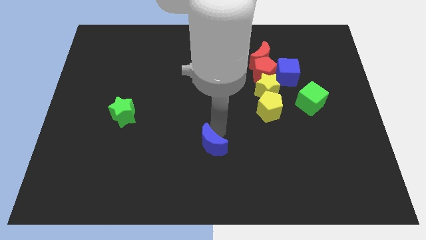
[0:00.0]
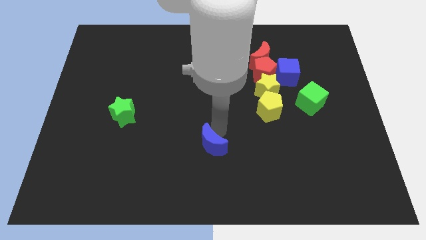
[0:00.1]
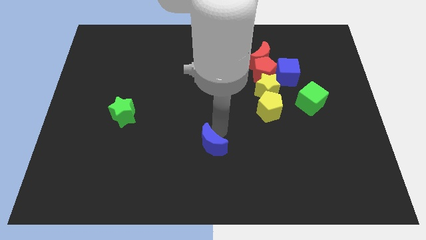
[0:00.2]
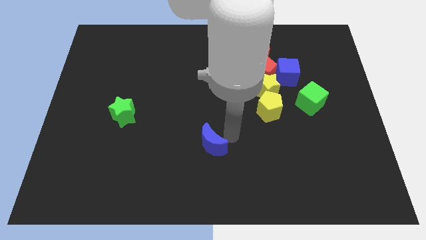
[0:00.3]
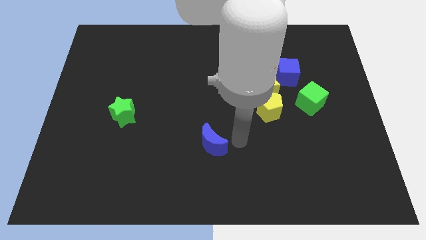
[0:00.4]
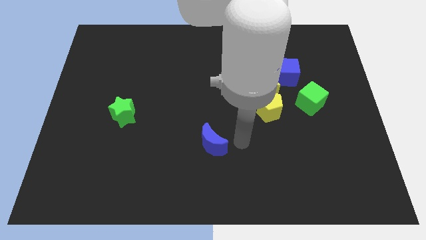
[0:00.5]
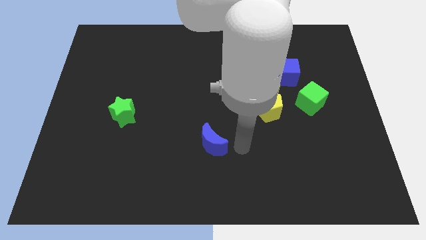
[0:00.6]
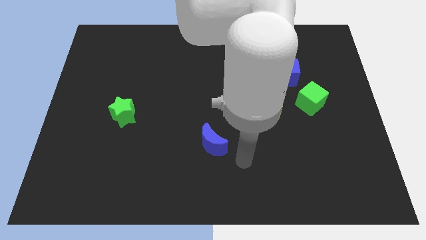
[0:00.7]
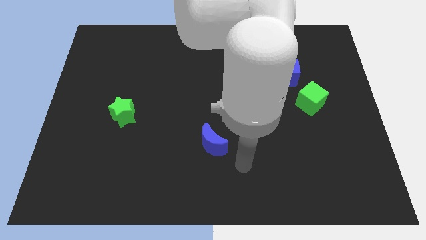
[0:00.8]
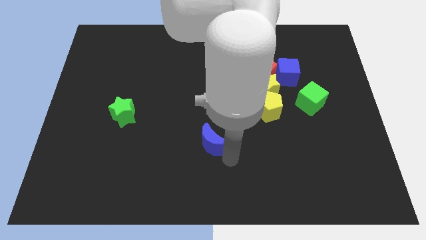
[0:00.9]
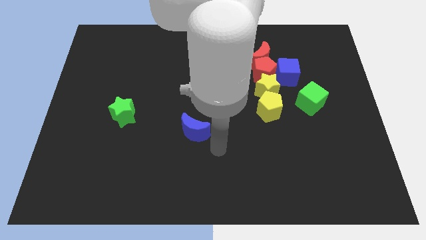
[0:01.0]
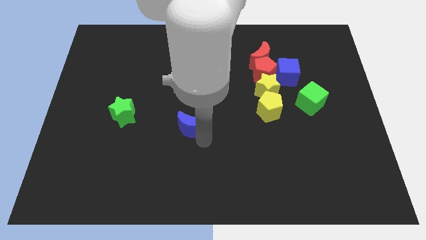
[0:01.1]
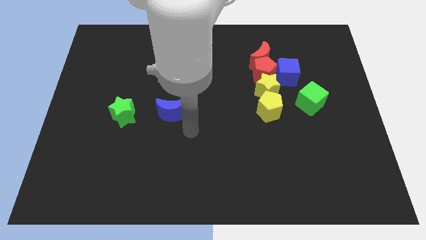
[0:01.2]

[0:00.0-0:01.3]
move the blue crescent parallel right to the green star

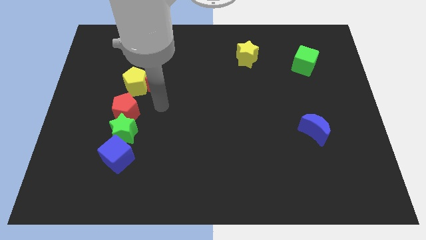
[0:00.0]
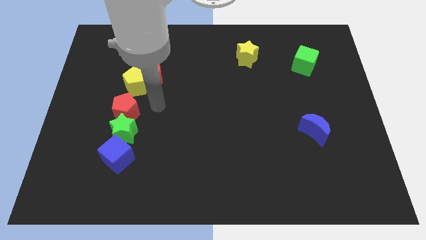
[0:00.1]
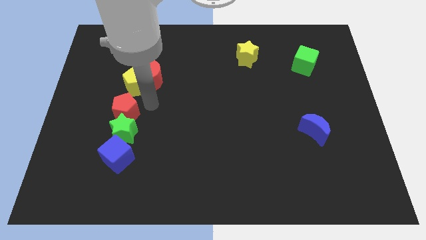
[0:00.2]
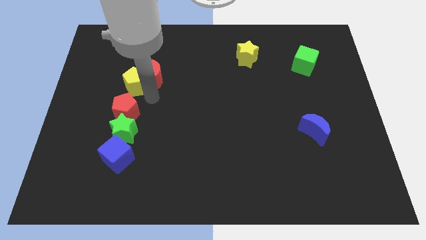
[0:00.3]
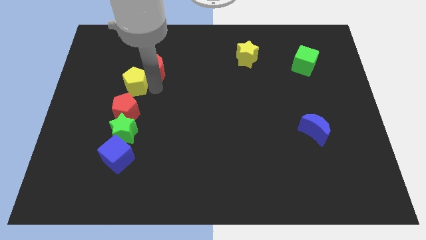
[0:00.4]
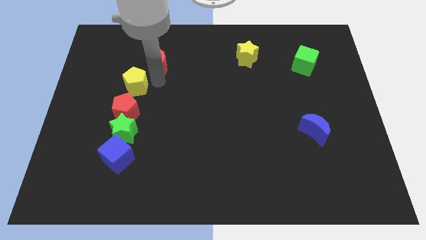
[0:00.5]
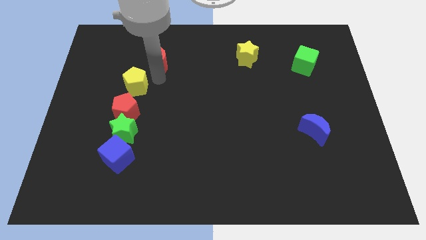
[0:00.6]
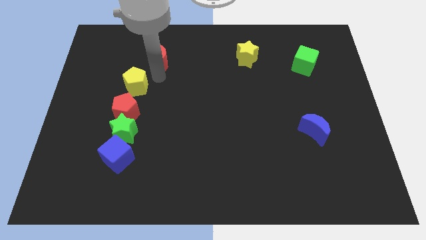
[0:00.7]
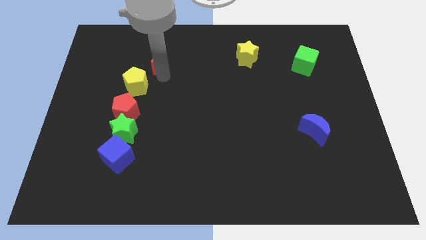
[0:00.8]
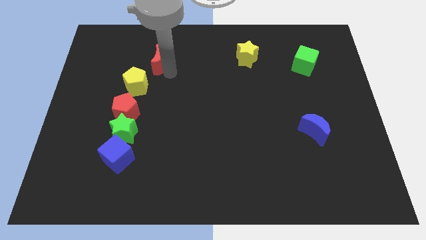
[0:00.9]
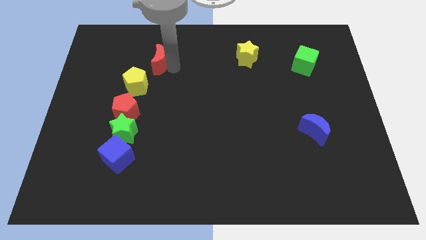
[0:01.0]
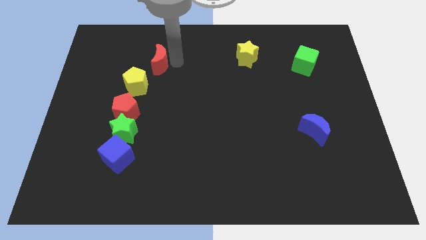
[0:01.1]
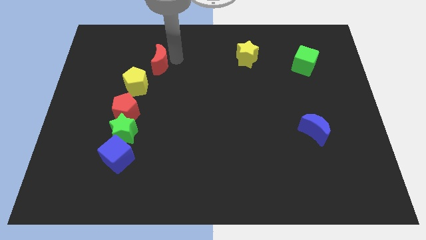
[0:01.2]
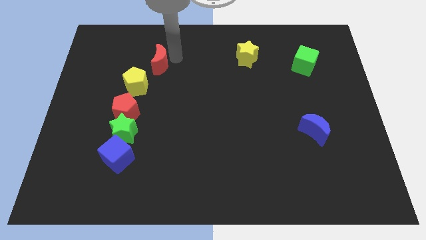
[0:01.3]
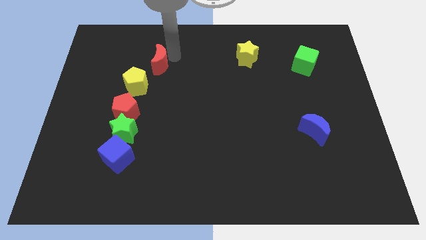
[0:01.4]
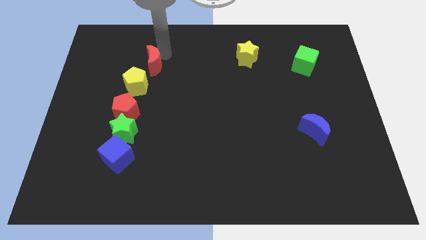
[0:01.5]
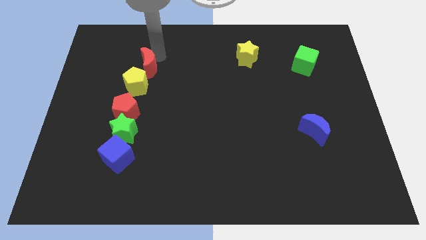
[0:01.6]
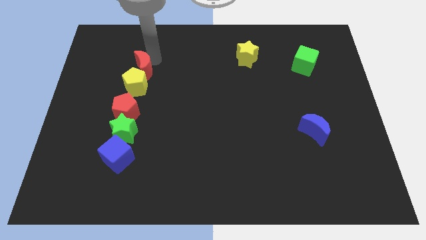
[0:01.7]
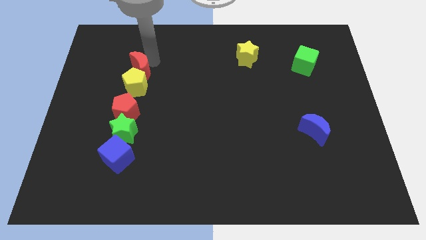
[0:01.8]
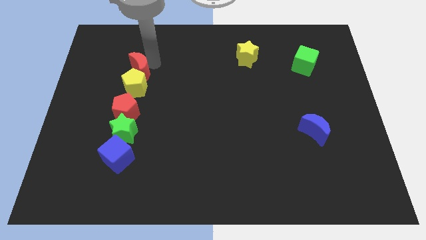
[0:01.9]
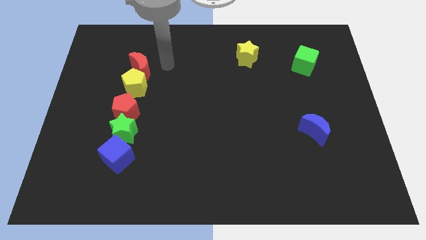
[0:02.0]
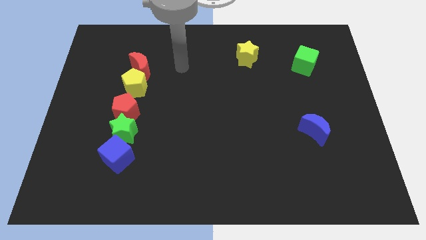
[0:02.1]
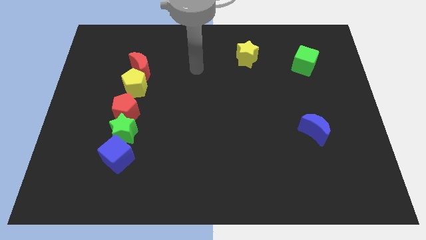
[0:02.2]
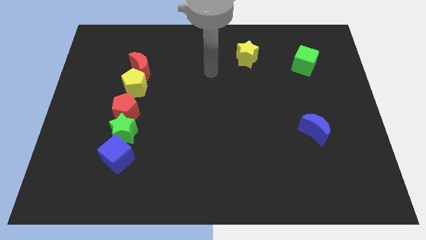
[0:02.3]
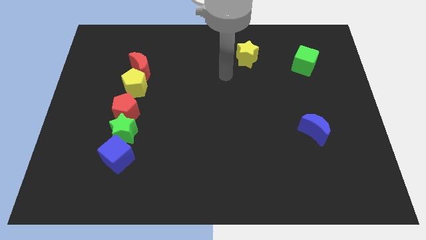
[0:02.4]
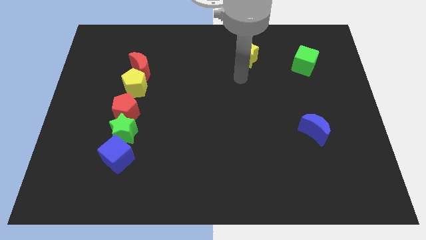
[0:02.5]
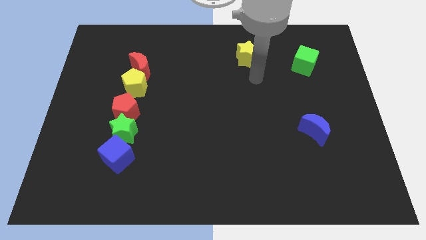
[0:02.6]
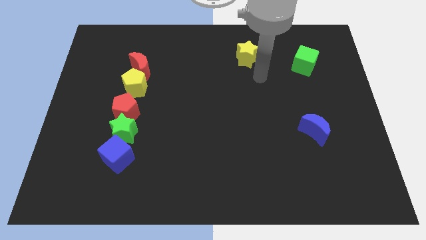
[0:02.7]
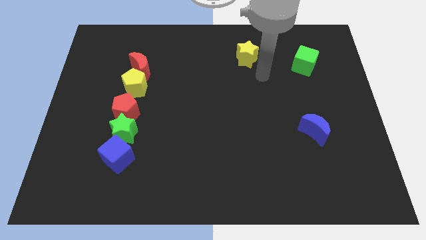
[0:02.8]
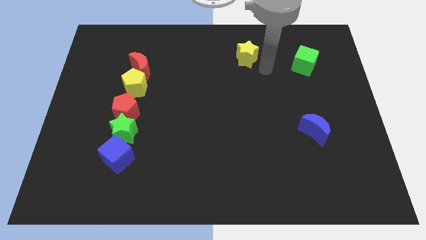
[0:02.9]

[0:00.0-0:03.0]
push the red crescent to the top of the yellow pentagon

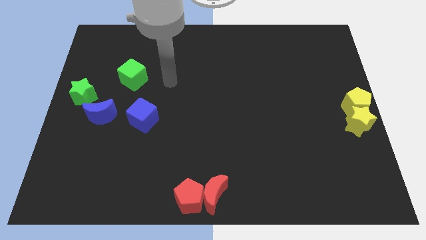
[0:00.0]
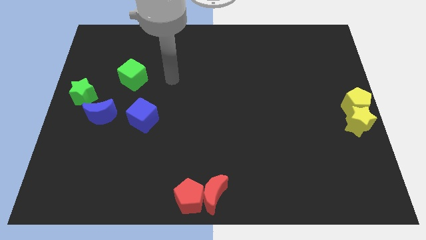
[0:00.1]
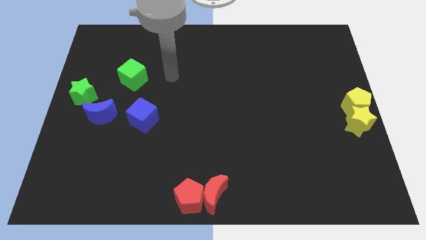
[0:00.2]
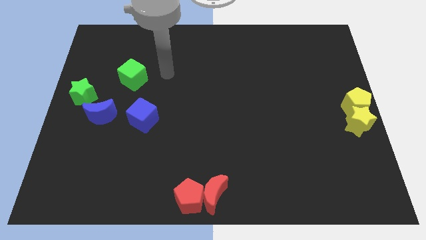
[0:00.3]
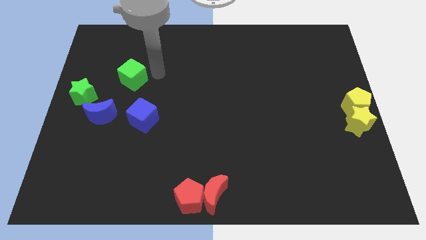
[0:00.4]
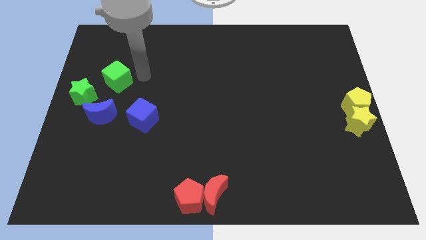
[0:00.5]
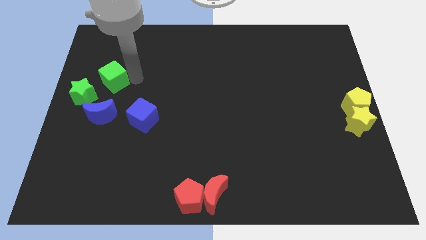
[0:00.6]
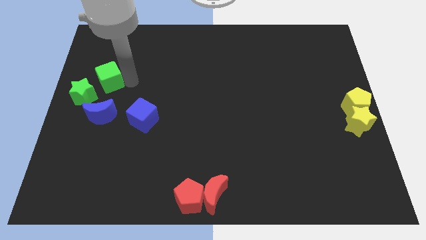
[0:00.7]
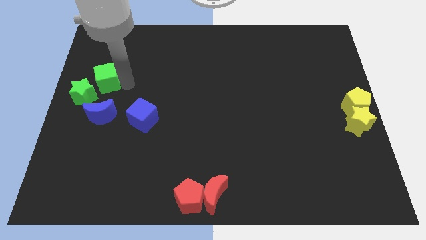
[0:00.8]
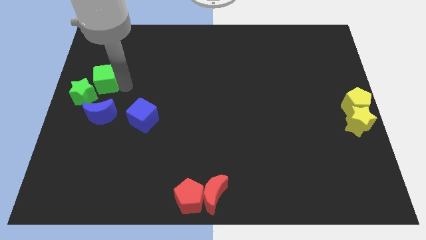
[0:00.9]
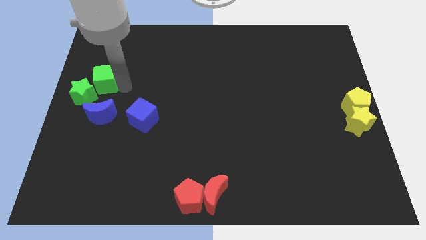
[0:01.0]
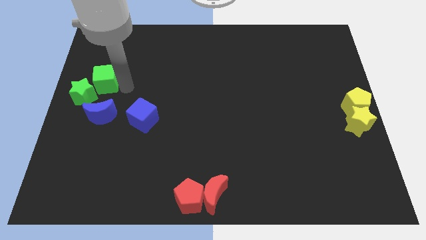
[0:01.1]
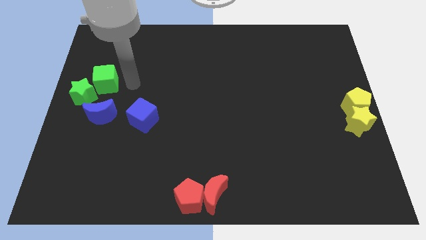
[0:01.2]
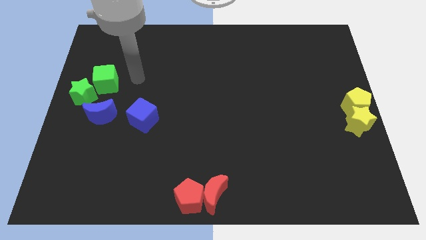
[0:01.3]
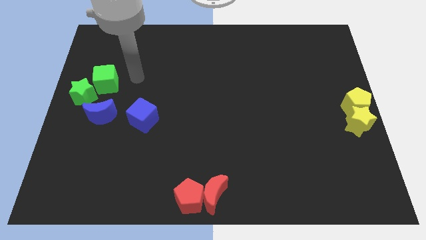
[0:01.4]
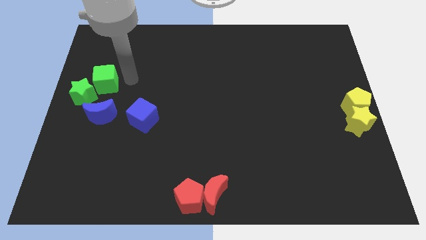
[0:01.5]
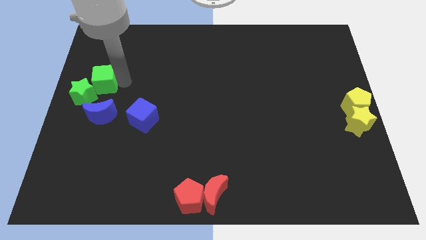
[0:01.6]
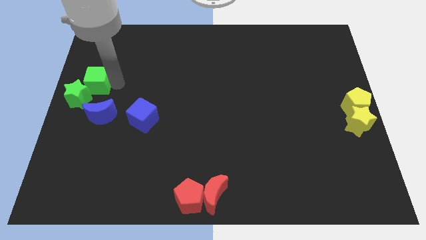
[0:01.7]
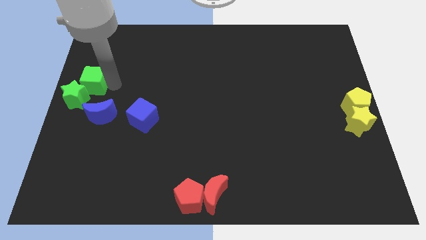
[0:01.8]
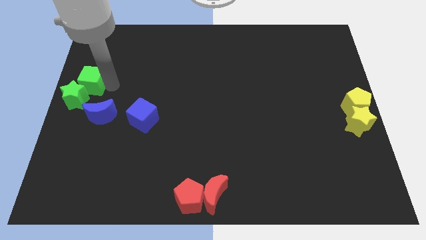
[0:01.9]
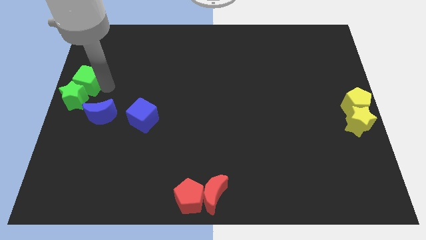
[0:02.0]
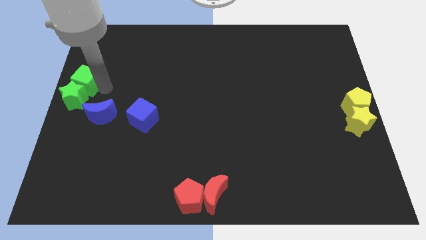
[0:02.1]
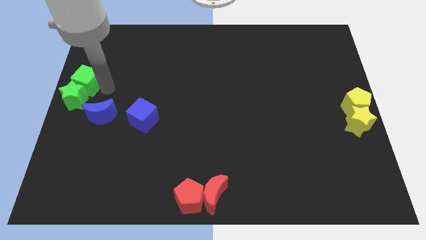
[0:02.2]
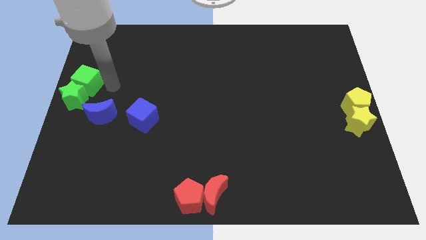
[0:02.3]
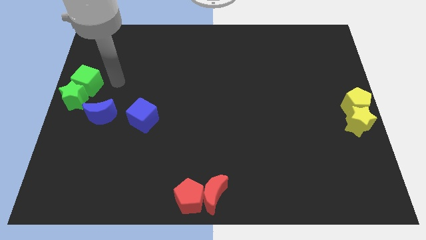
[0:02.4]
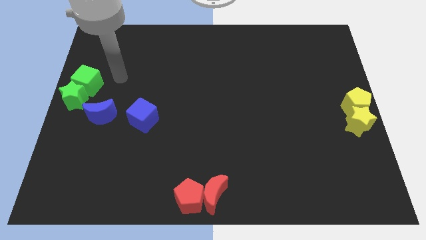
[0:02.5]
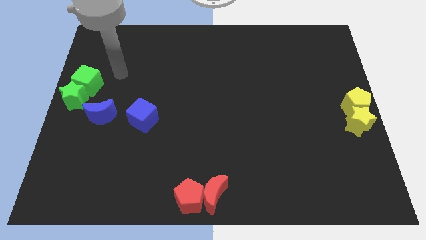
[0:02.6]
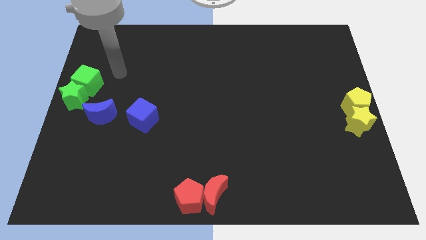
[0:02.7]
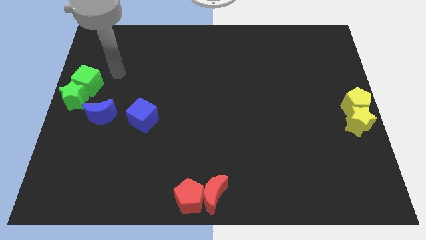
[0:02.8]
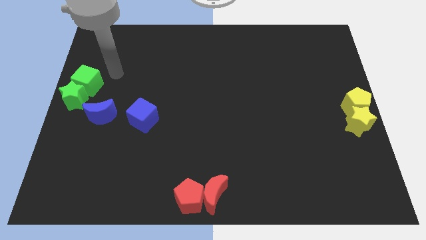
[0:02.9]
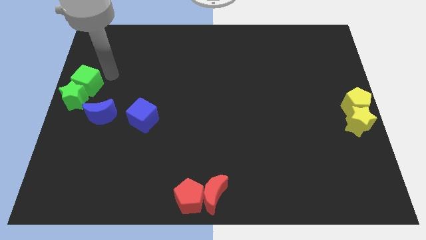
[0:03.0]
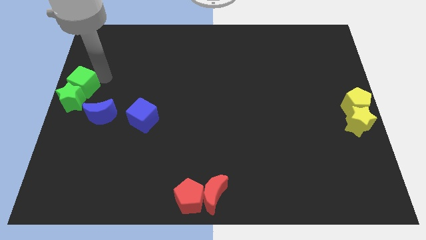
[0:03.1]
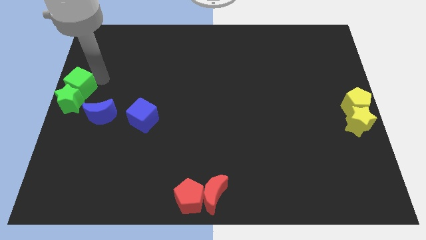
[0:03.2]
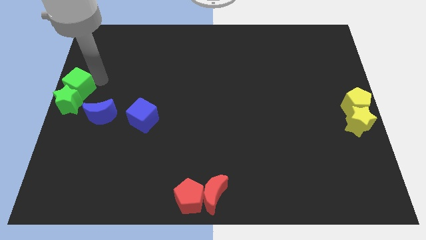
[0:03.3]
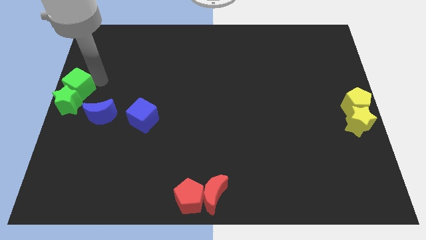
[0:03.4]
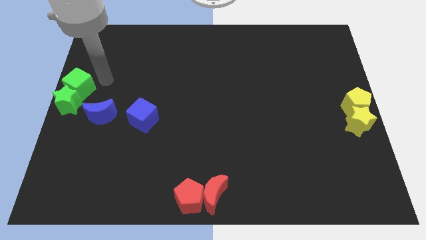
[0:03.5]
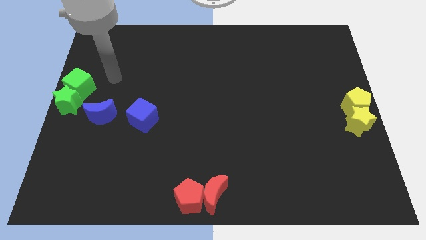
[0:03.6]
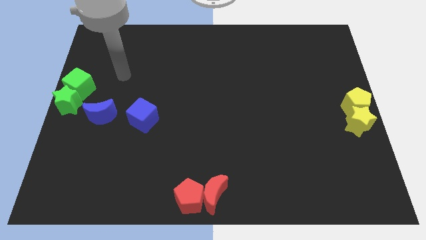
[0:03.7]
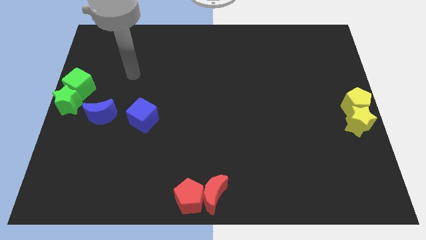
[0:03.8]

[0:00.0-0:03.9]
push the green cube along with the green star to the left center of the board

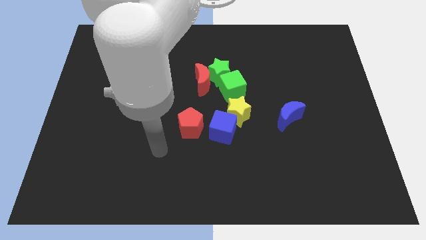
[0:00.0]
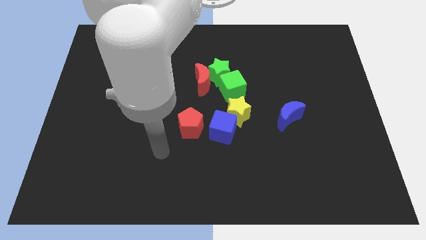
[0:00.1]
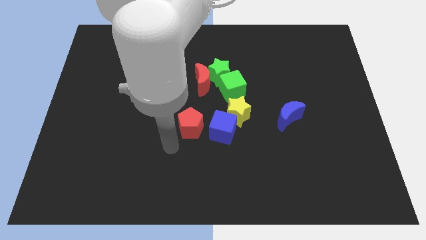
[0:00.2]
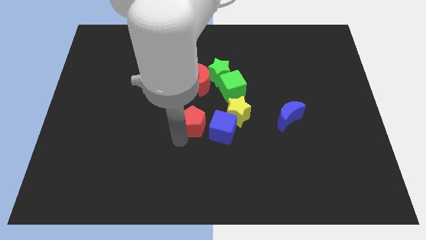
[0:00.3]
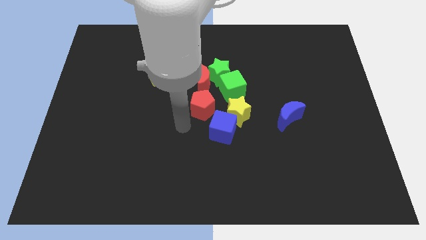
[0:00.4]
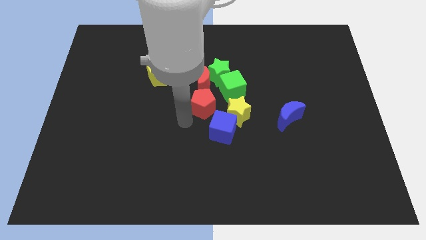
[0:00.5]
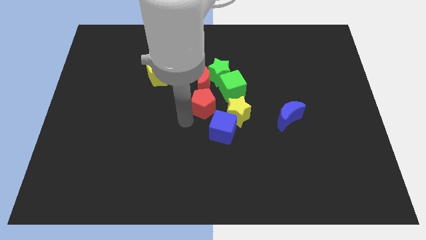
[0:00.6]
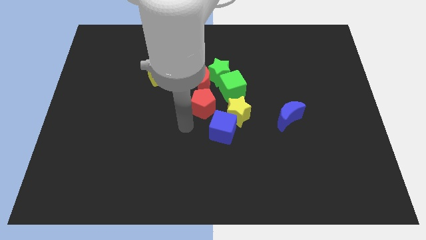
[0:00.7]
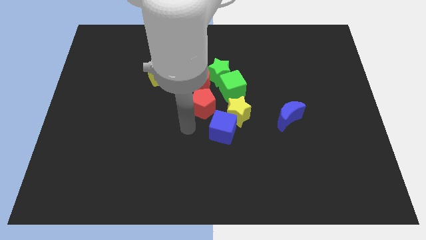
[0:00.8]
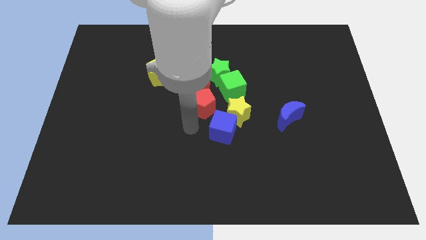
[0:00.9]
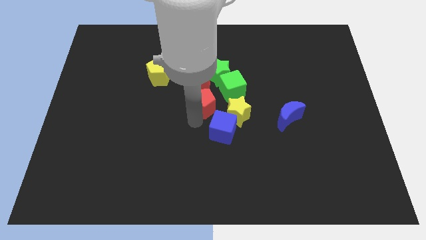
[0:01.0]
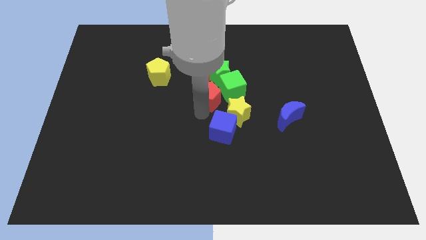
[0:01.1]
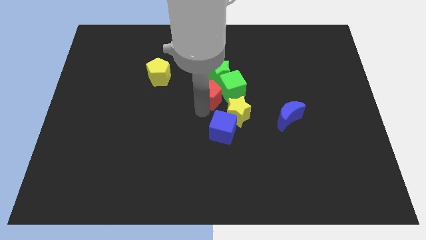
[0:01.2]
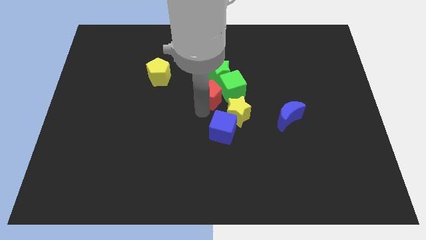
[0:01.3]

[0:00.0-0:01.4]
place red pentagon below the green cube
